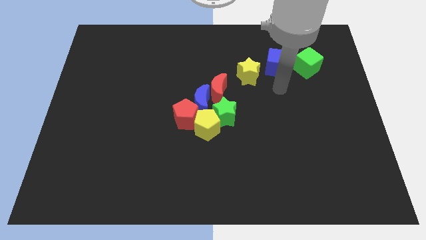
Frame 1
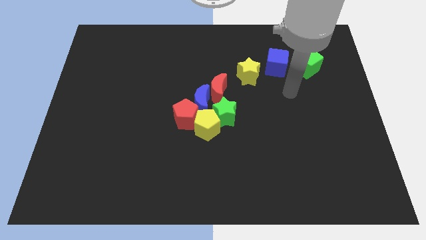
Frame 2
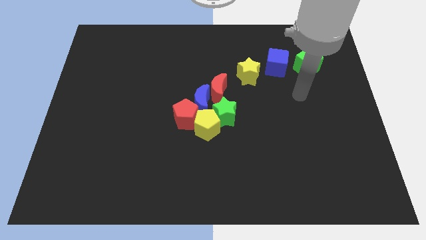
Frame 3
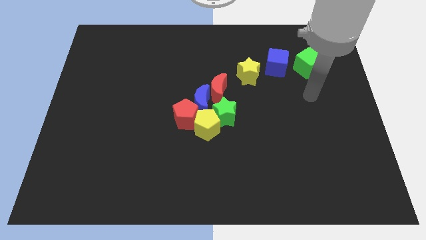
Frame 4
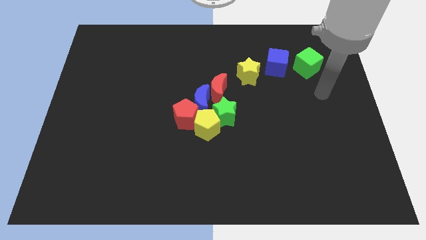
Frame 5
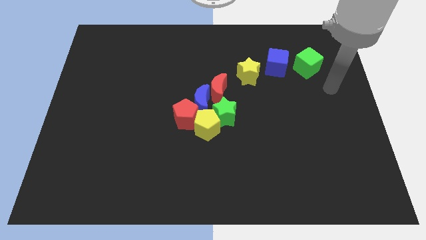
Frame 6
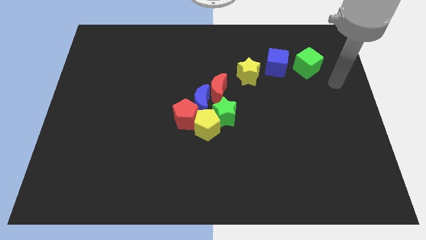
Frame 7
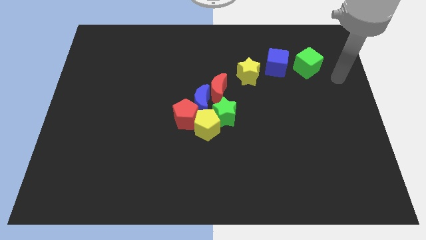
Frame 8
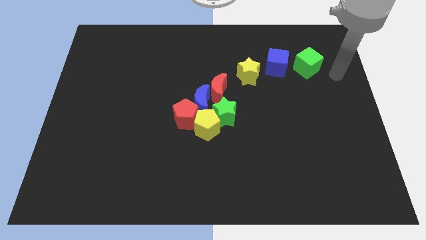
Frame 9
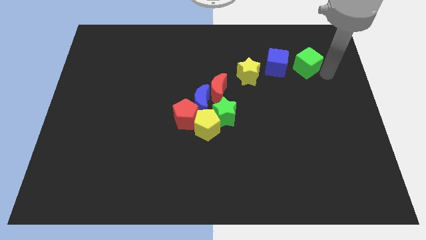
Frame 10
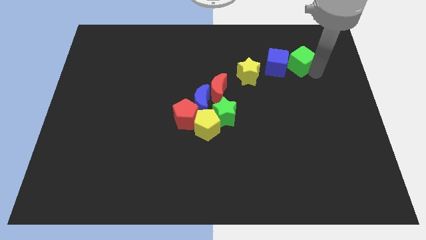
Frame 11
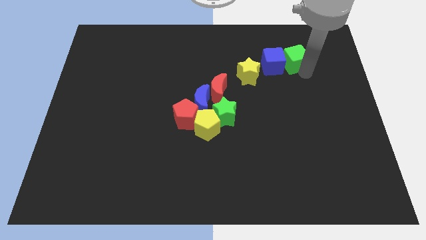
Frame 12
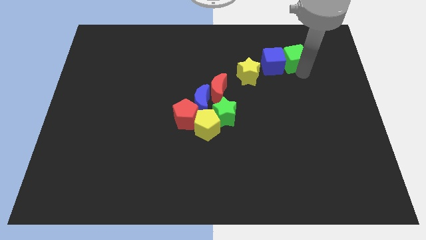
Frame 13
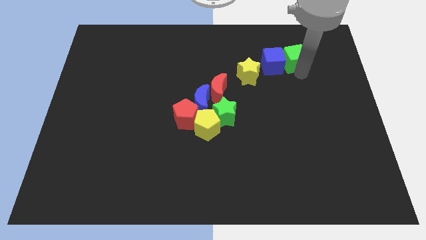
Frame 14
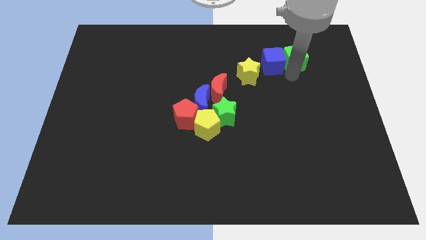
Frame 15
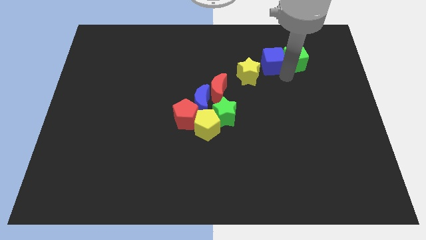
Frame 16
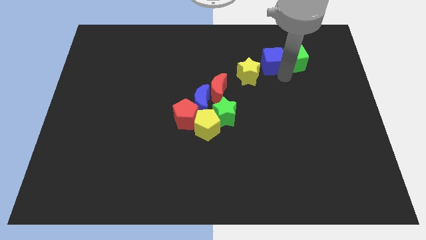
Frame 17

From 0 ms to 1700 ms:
push the green cube towards the blue cube

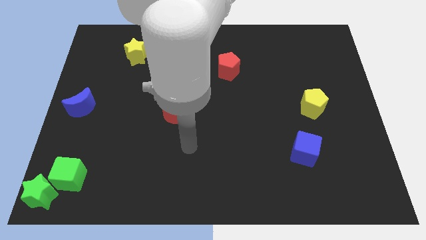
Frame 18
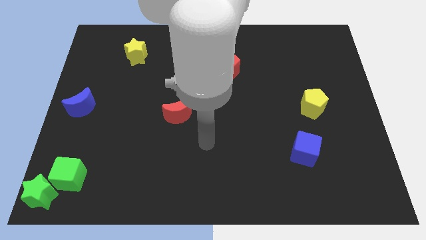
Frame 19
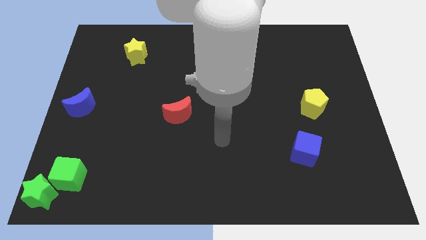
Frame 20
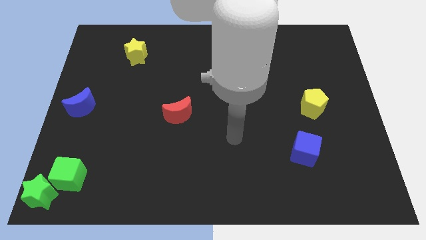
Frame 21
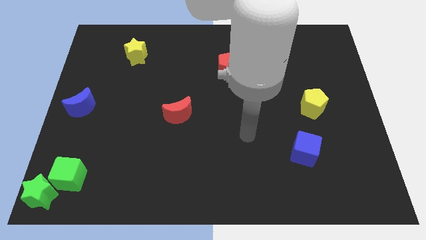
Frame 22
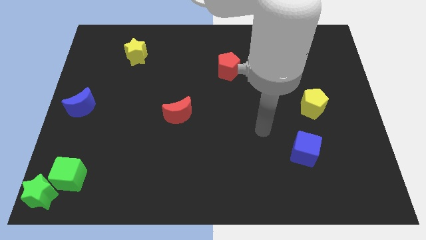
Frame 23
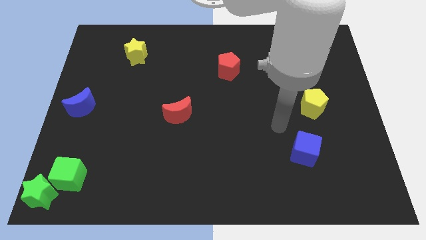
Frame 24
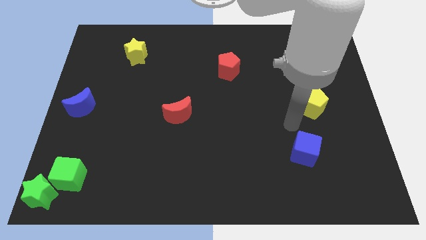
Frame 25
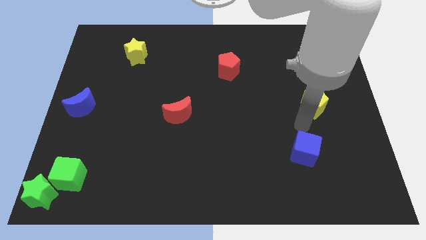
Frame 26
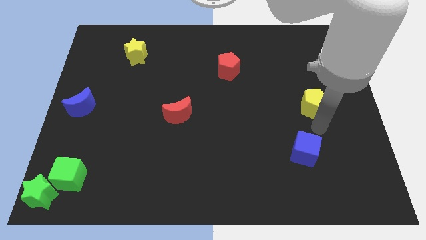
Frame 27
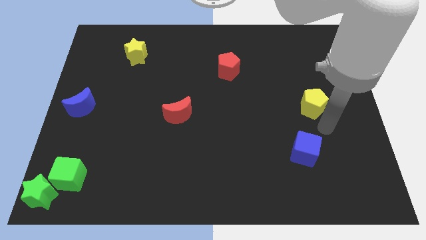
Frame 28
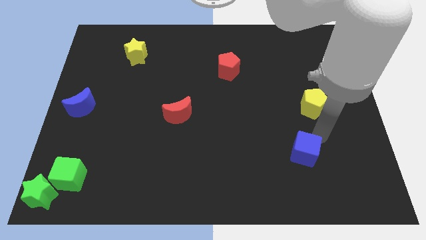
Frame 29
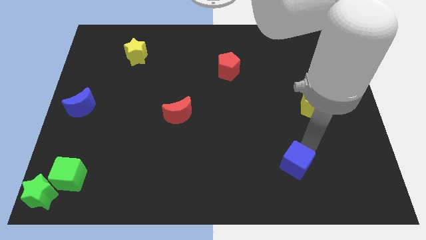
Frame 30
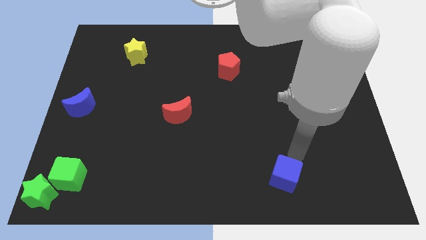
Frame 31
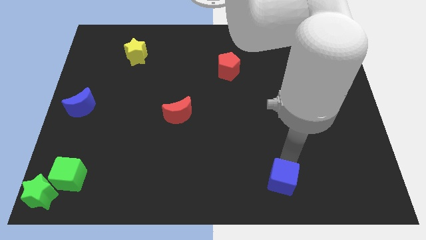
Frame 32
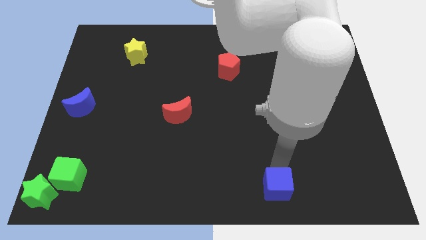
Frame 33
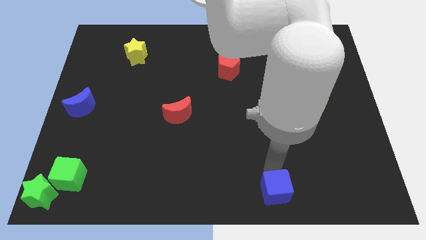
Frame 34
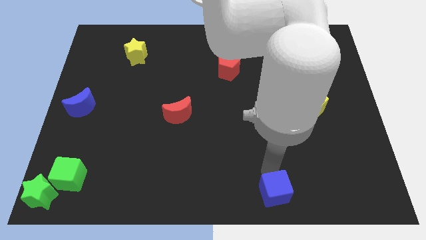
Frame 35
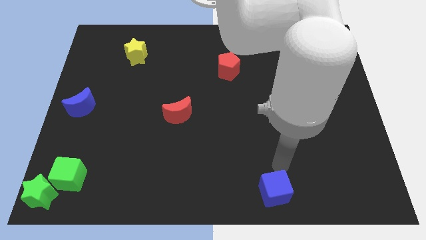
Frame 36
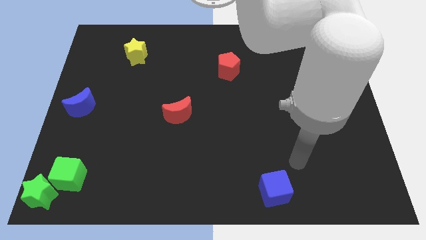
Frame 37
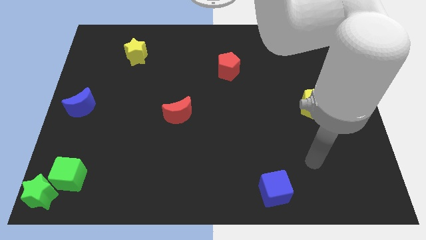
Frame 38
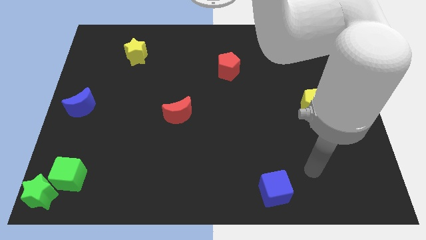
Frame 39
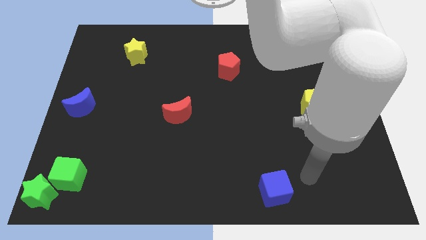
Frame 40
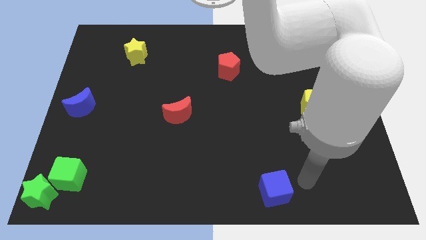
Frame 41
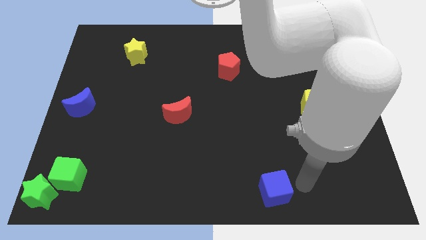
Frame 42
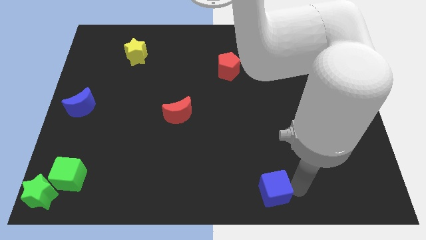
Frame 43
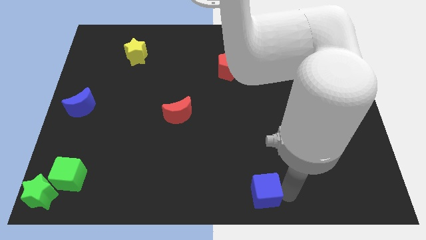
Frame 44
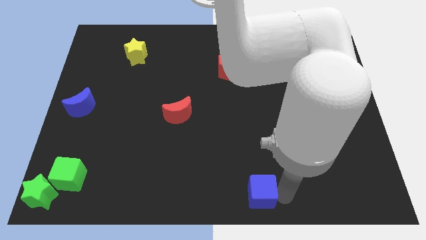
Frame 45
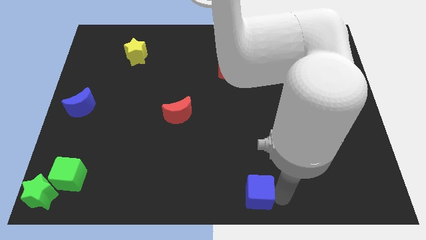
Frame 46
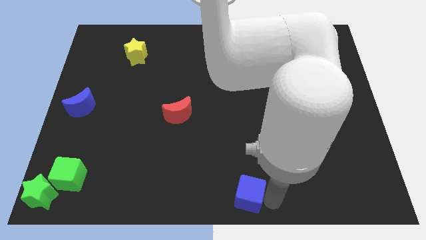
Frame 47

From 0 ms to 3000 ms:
move the blue cube towards the bottom center side

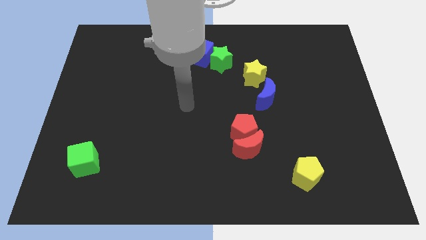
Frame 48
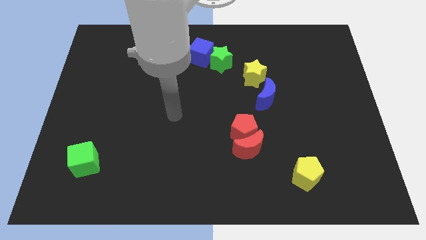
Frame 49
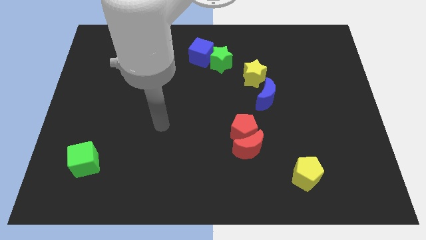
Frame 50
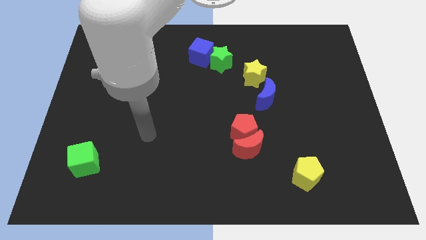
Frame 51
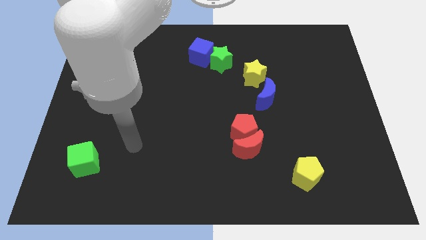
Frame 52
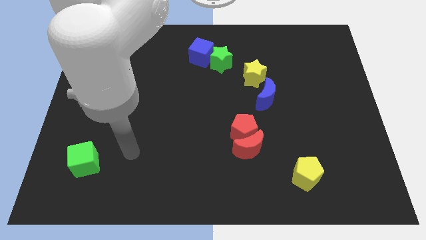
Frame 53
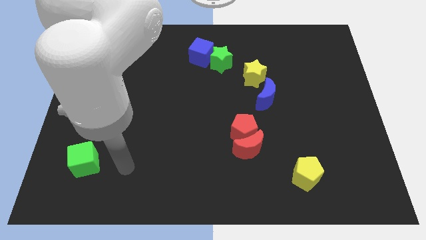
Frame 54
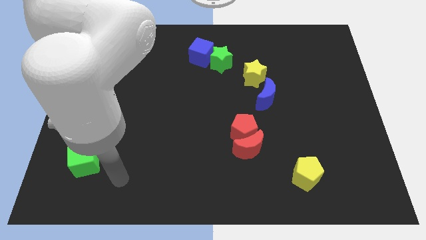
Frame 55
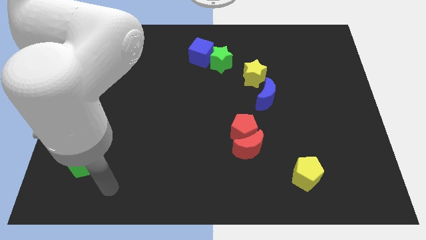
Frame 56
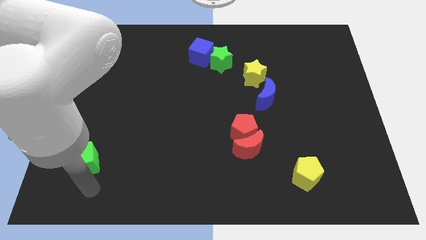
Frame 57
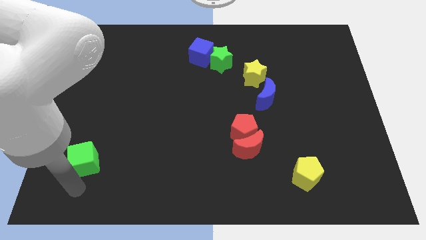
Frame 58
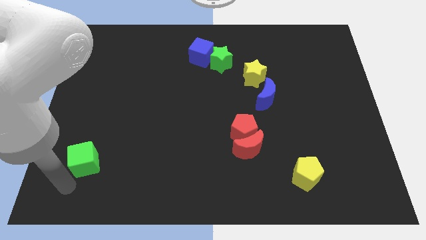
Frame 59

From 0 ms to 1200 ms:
point your hand below the green cube

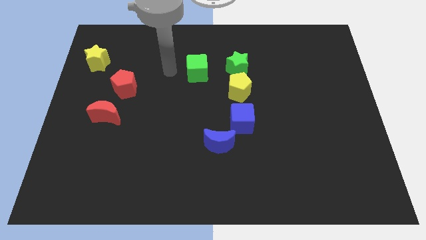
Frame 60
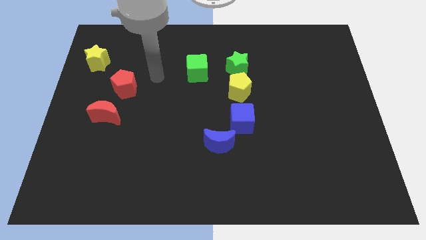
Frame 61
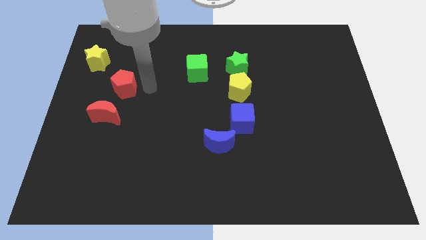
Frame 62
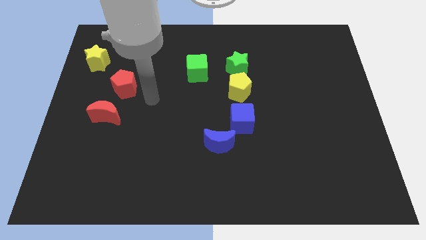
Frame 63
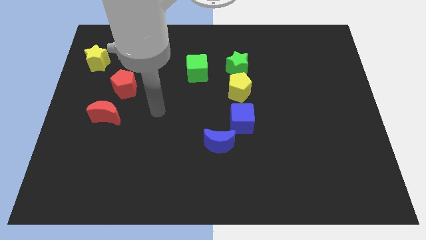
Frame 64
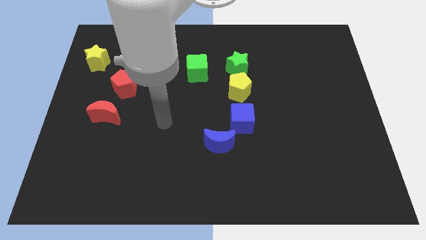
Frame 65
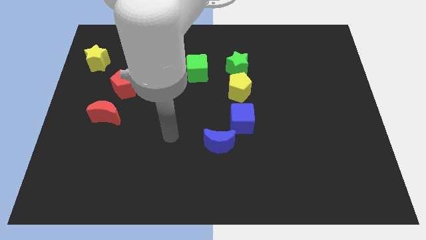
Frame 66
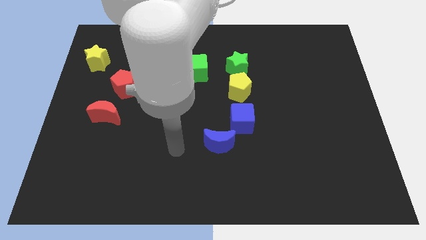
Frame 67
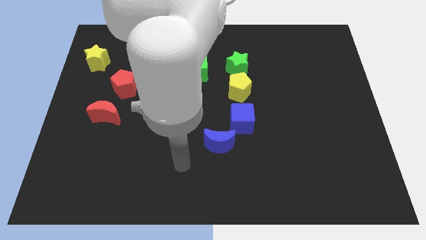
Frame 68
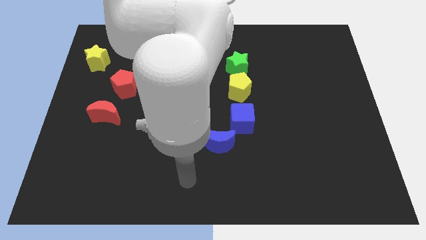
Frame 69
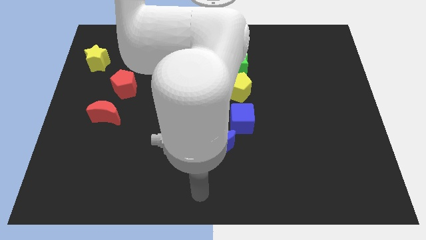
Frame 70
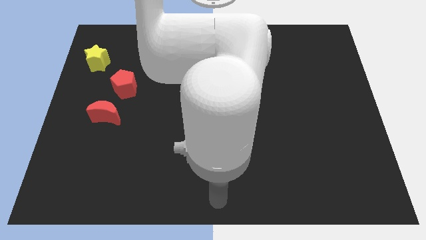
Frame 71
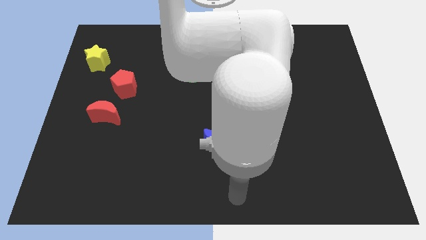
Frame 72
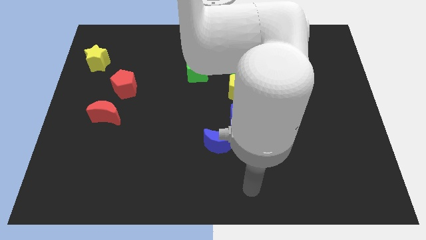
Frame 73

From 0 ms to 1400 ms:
move your arm to the bottom center of the board

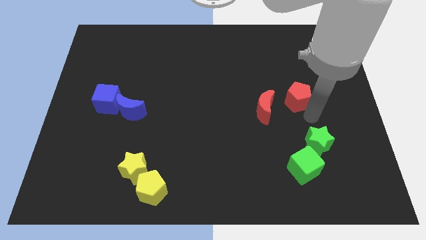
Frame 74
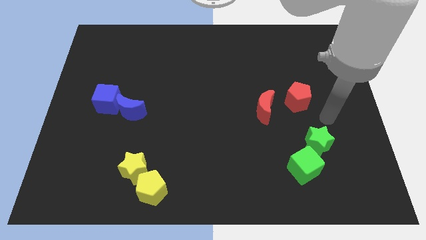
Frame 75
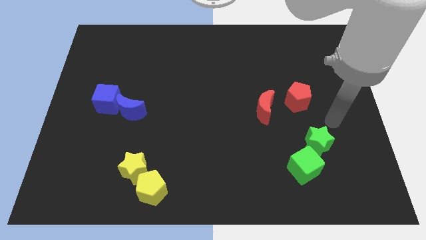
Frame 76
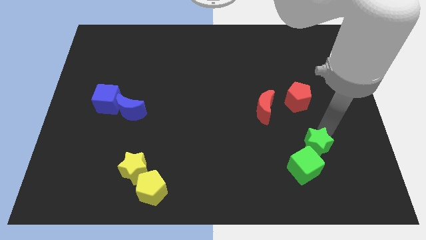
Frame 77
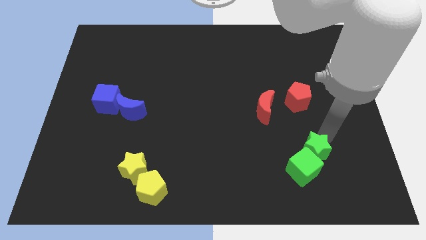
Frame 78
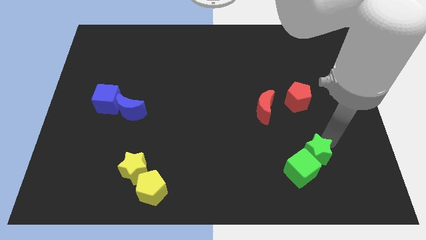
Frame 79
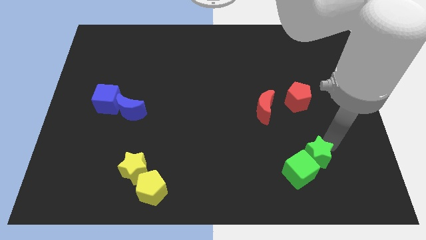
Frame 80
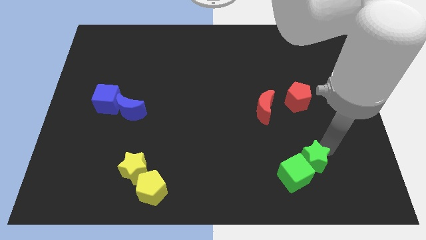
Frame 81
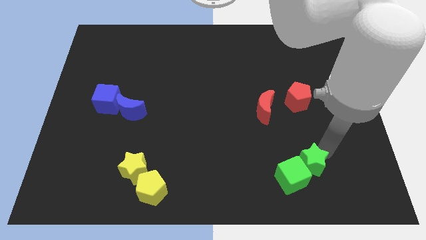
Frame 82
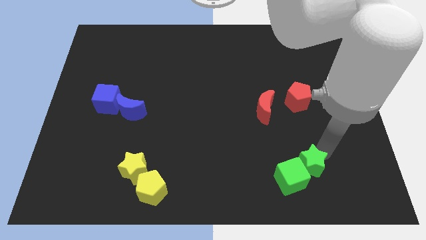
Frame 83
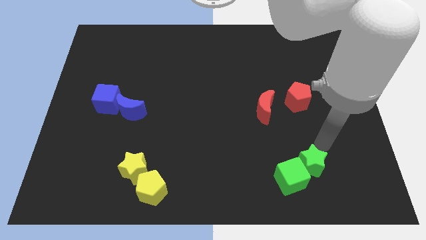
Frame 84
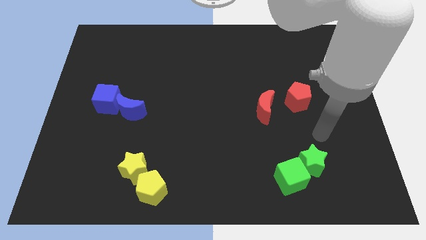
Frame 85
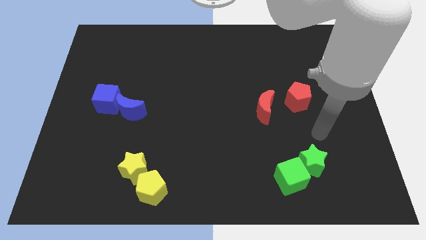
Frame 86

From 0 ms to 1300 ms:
push the green star into the green cube

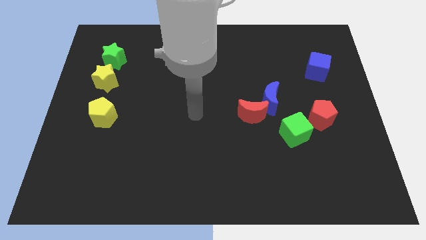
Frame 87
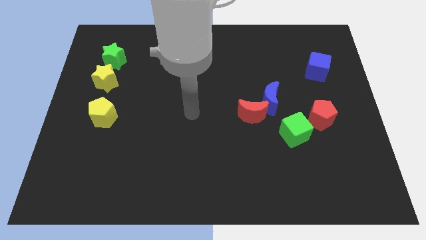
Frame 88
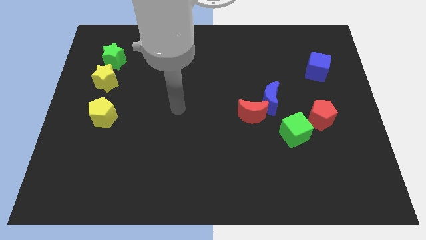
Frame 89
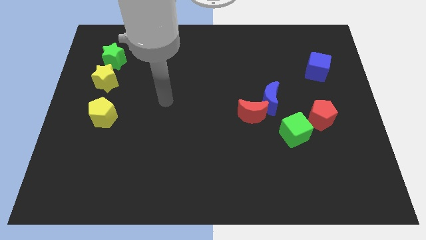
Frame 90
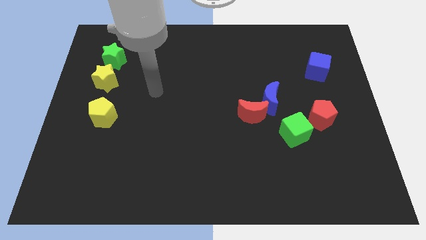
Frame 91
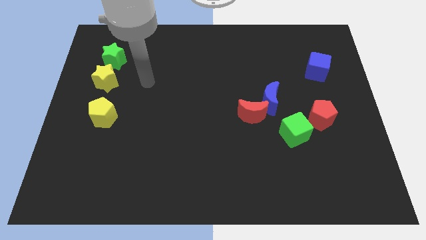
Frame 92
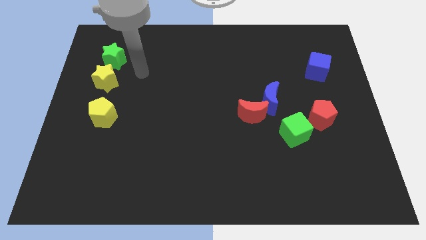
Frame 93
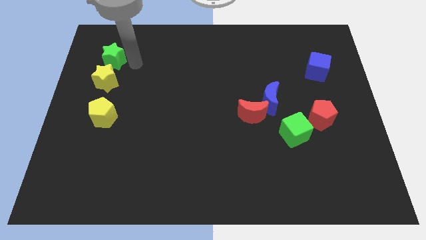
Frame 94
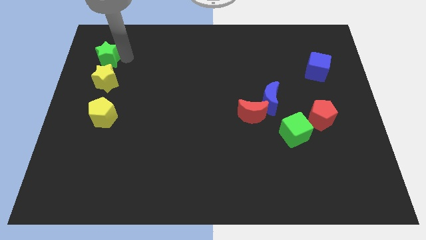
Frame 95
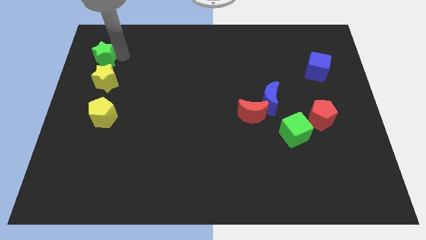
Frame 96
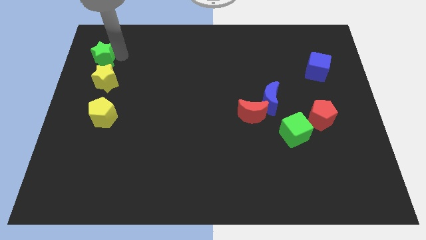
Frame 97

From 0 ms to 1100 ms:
slide green star slightly to the left
